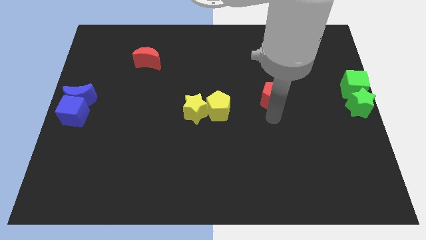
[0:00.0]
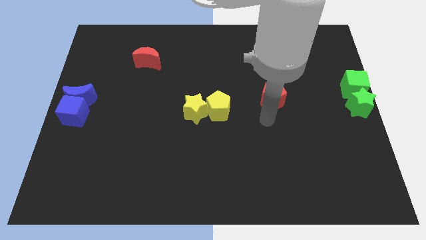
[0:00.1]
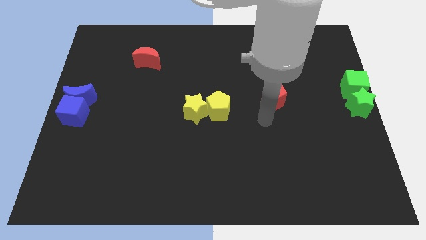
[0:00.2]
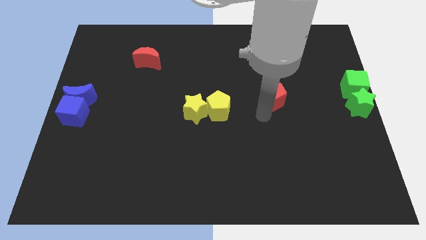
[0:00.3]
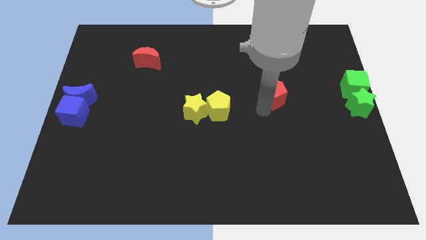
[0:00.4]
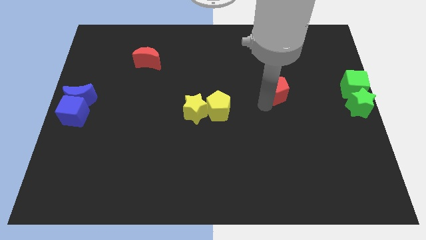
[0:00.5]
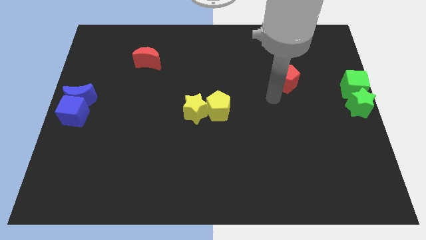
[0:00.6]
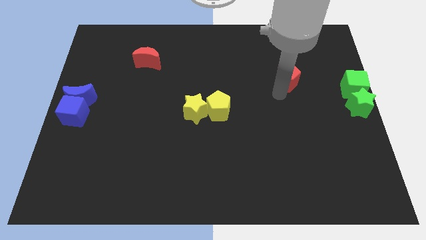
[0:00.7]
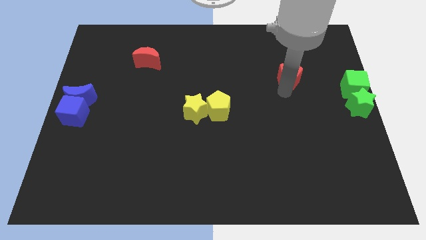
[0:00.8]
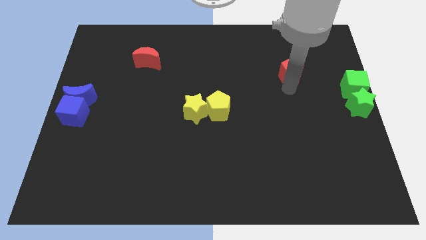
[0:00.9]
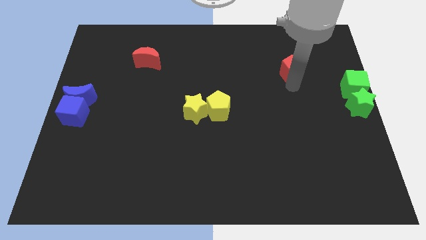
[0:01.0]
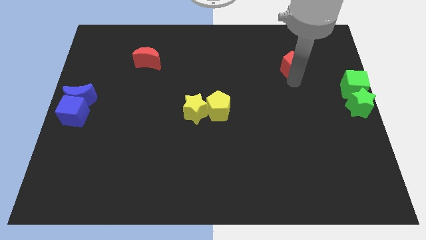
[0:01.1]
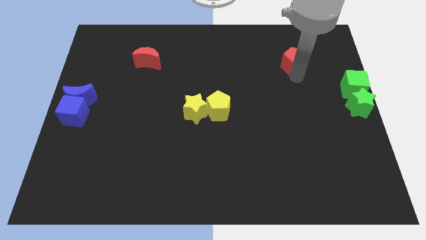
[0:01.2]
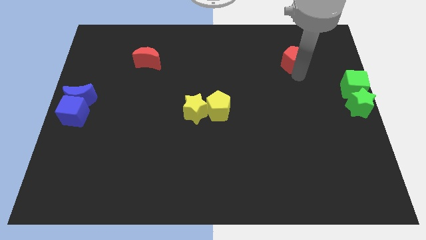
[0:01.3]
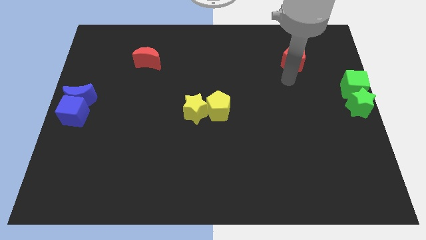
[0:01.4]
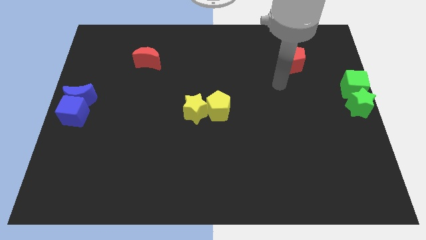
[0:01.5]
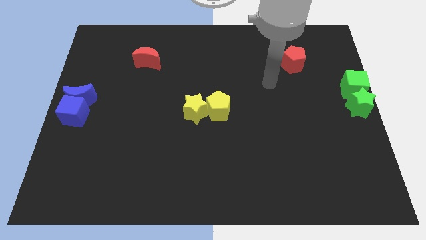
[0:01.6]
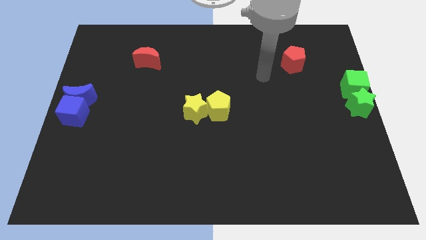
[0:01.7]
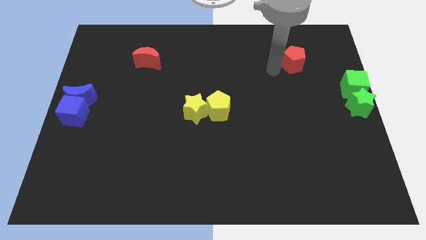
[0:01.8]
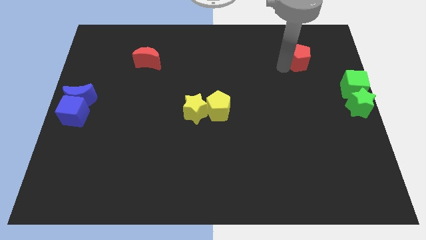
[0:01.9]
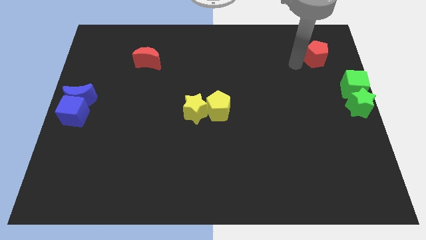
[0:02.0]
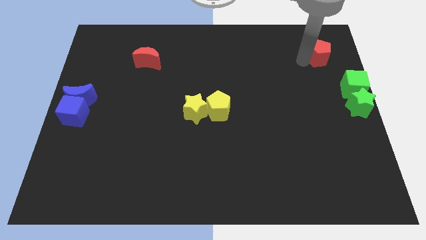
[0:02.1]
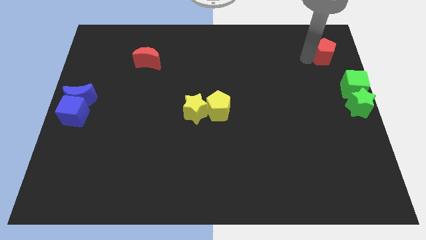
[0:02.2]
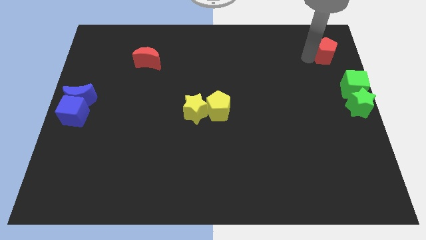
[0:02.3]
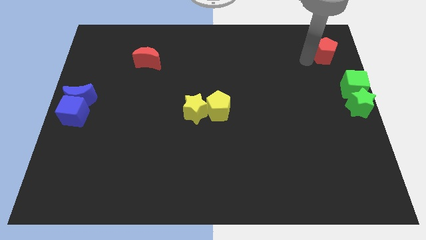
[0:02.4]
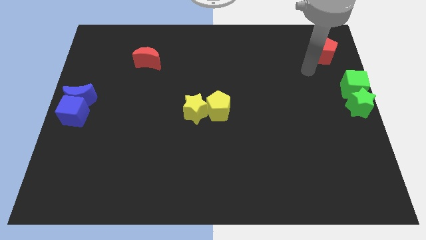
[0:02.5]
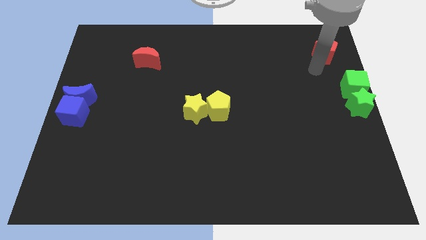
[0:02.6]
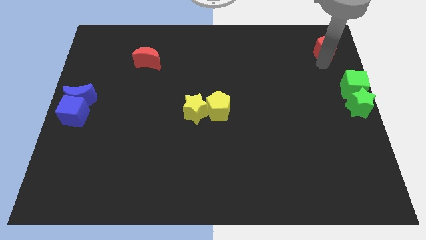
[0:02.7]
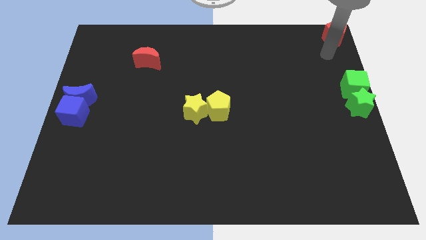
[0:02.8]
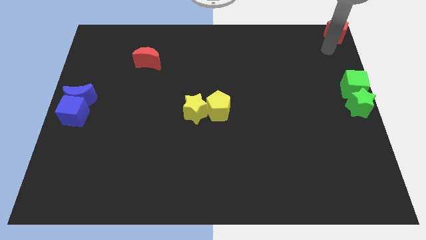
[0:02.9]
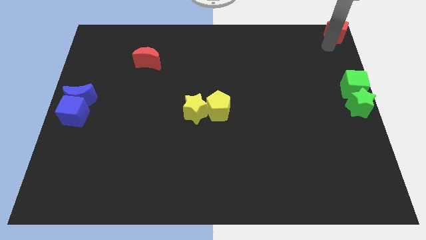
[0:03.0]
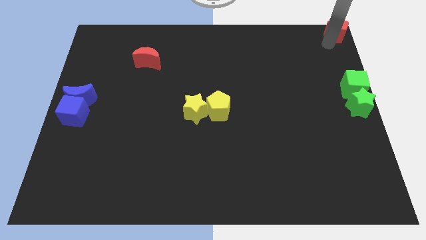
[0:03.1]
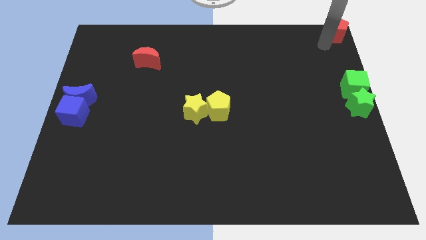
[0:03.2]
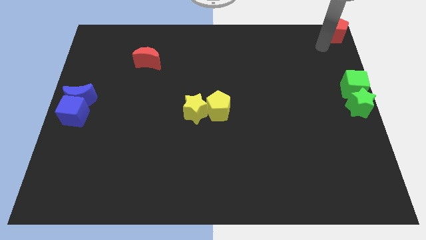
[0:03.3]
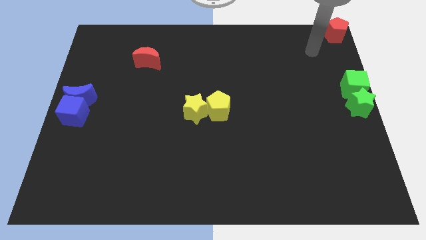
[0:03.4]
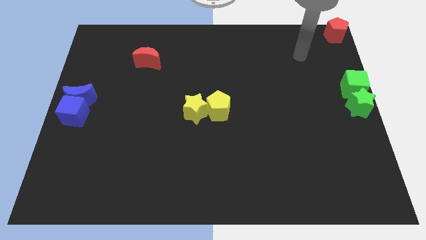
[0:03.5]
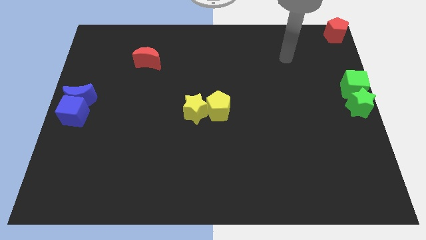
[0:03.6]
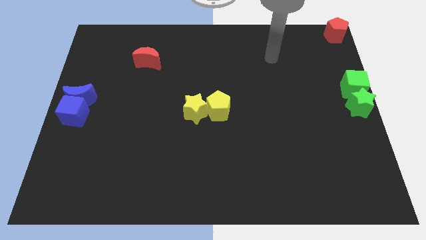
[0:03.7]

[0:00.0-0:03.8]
push the red pentagon to the top right corner of the board

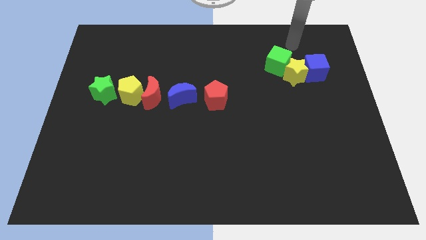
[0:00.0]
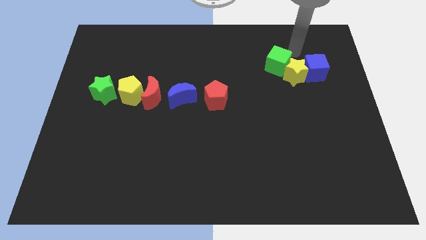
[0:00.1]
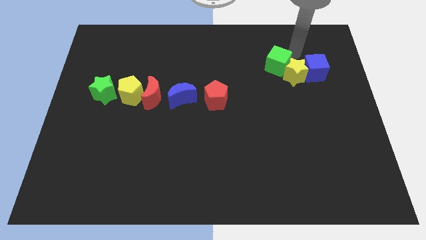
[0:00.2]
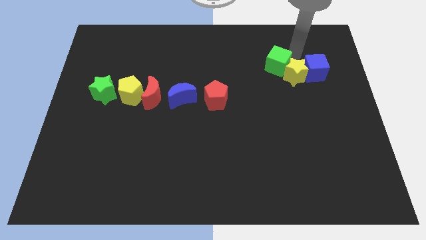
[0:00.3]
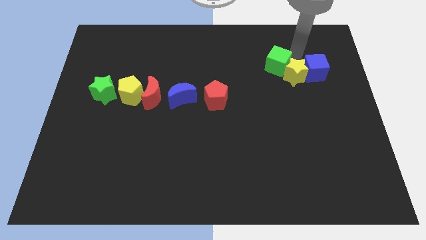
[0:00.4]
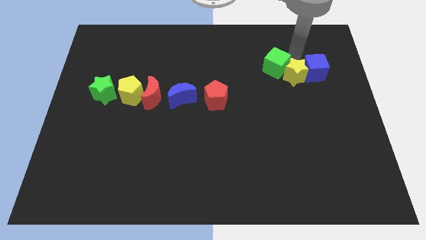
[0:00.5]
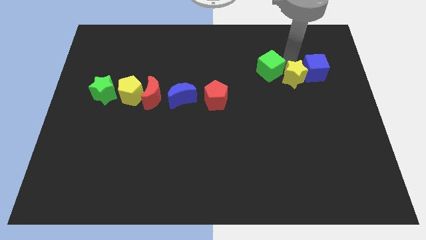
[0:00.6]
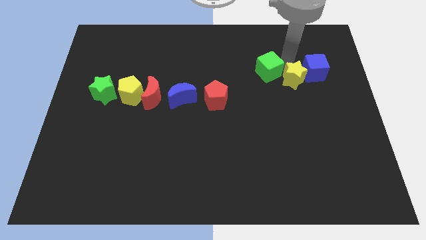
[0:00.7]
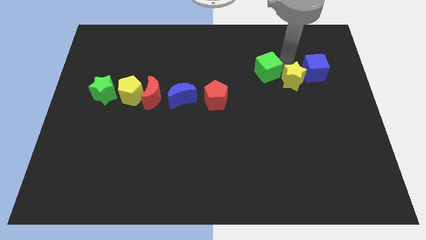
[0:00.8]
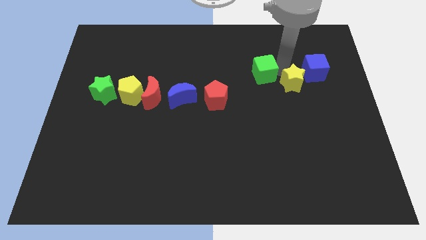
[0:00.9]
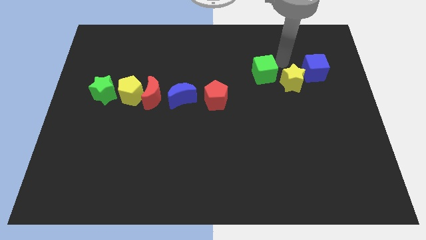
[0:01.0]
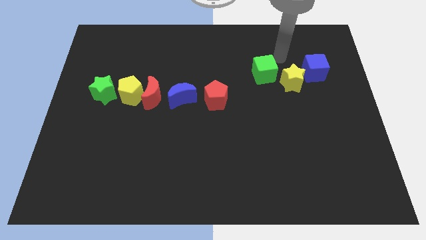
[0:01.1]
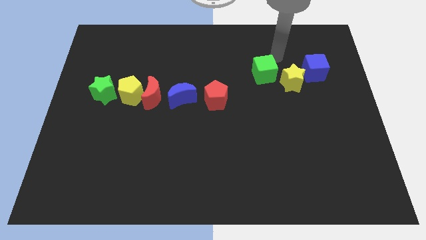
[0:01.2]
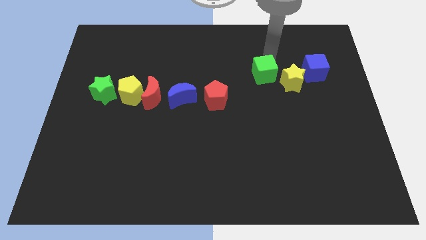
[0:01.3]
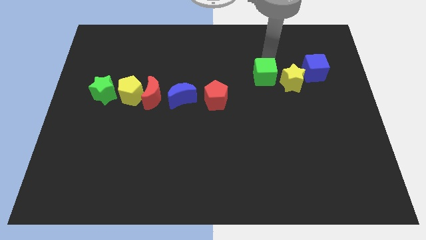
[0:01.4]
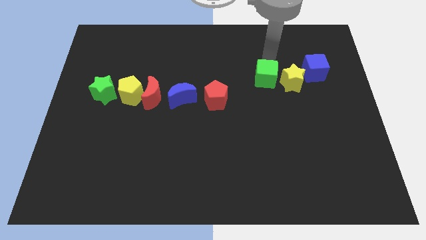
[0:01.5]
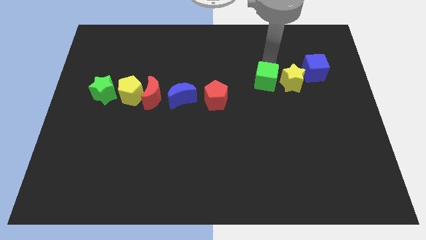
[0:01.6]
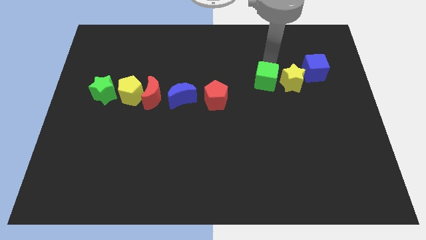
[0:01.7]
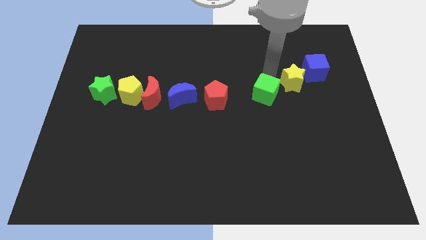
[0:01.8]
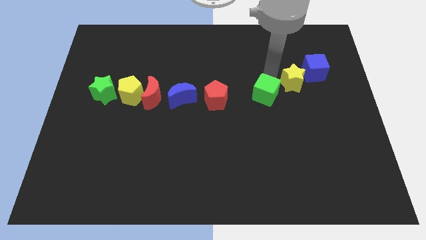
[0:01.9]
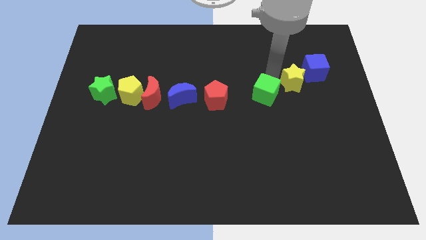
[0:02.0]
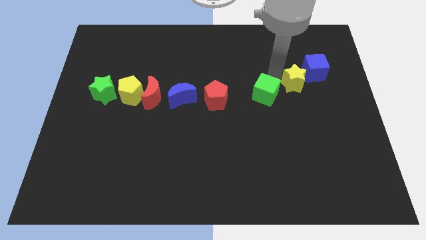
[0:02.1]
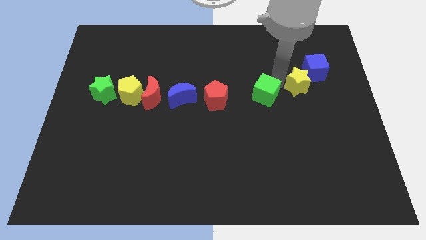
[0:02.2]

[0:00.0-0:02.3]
separate green cube and green star

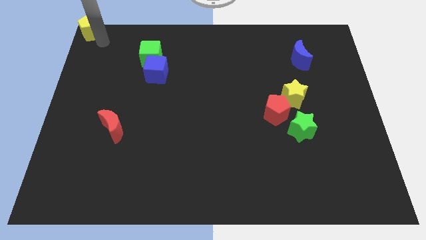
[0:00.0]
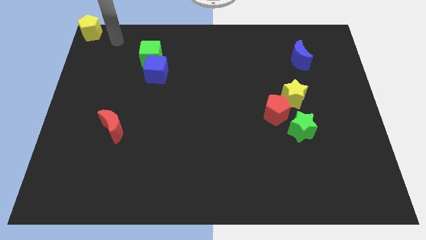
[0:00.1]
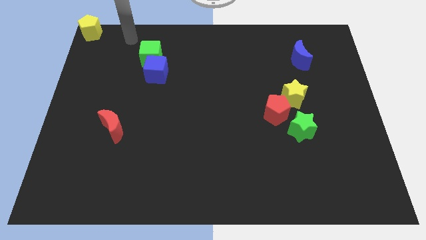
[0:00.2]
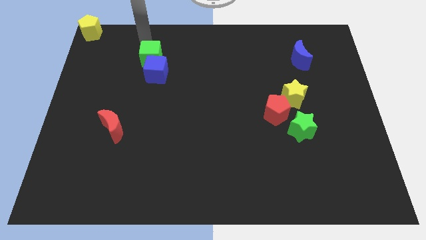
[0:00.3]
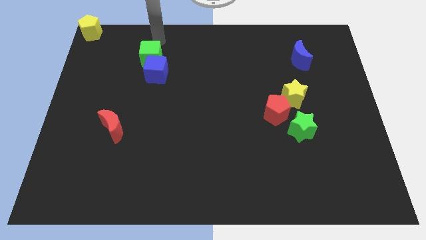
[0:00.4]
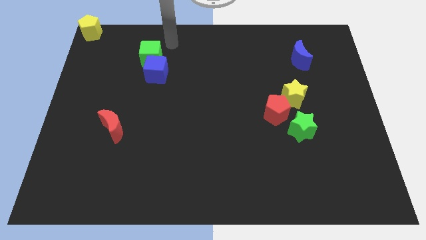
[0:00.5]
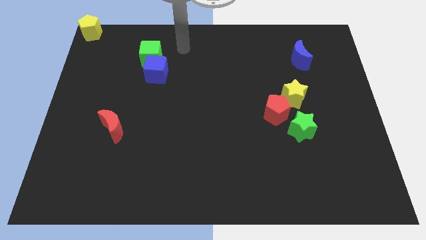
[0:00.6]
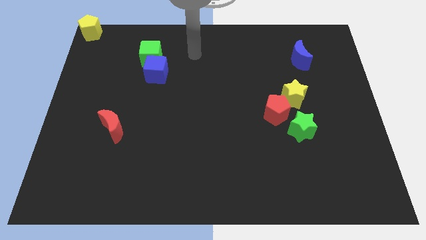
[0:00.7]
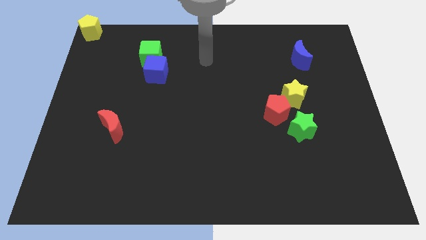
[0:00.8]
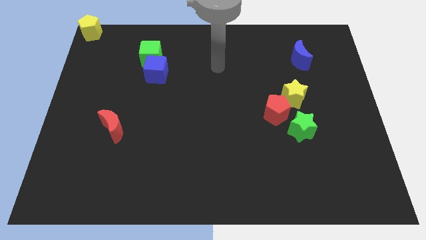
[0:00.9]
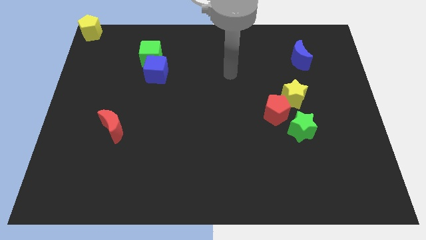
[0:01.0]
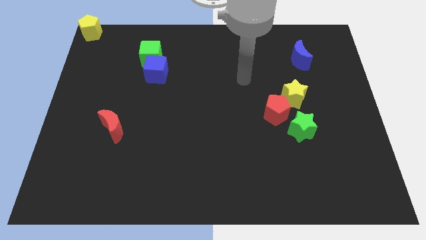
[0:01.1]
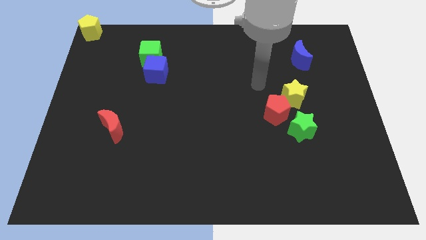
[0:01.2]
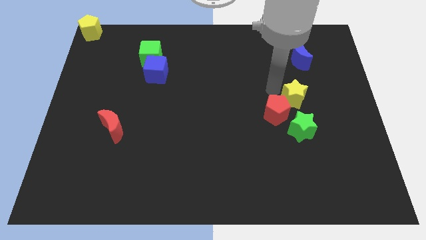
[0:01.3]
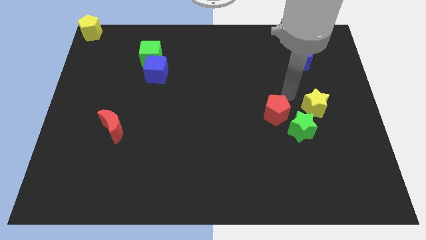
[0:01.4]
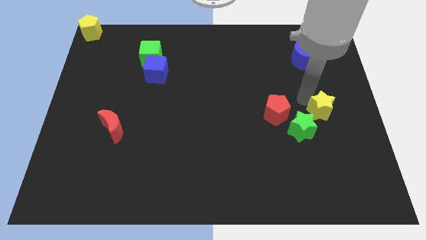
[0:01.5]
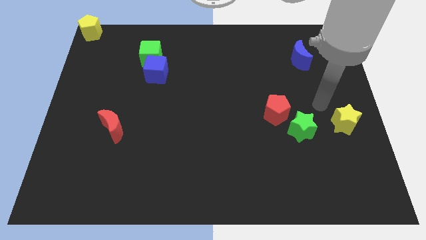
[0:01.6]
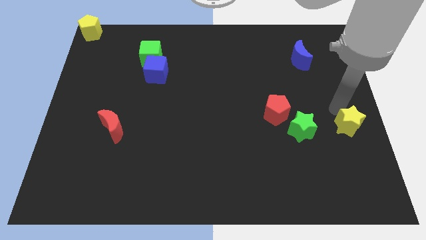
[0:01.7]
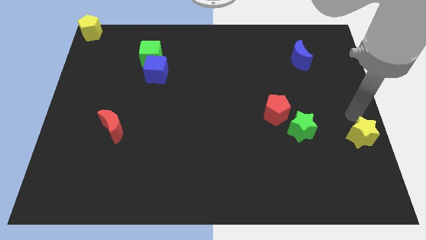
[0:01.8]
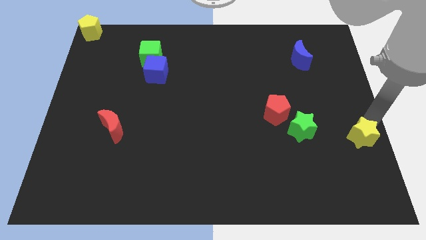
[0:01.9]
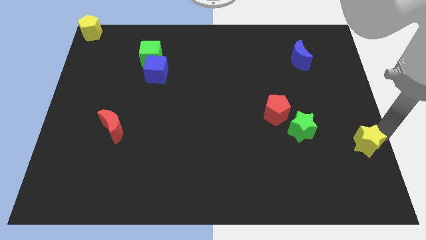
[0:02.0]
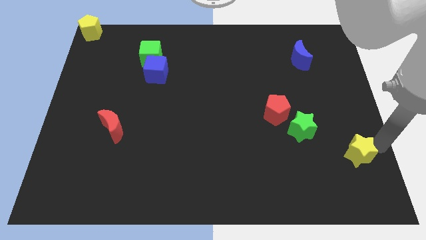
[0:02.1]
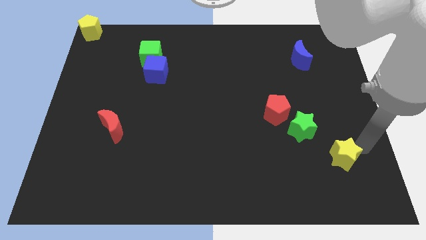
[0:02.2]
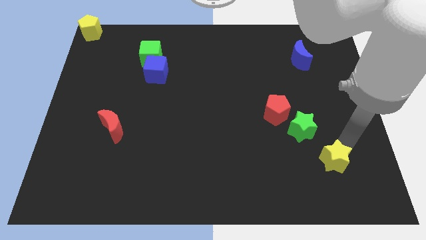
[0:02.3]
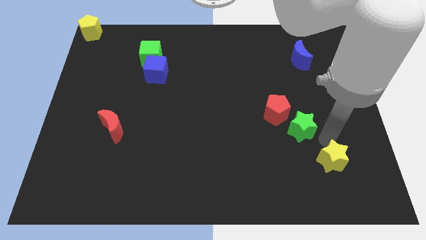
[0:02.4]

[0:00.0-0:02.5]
push the yellow star to the bottom right of green star

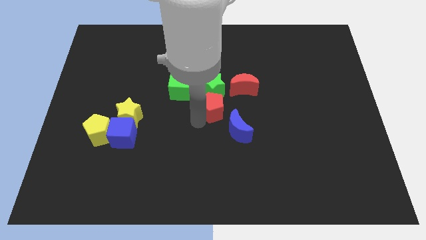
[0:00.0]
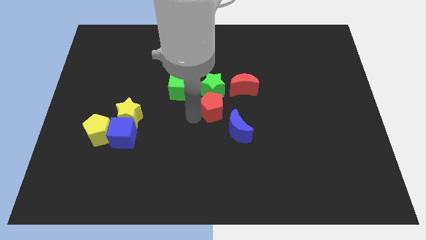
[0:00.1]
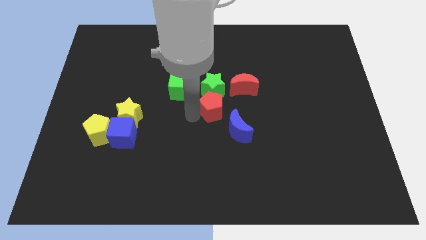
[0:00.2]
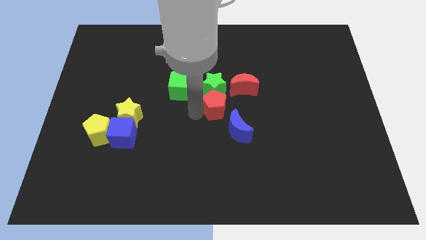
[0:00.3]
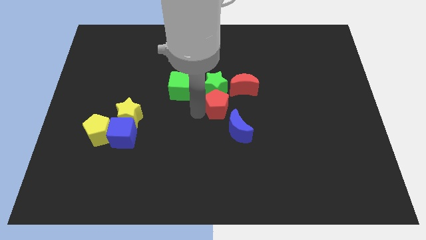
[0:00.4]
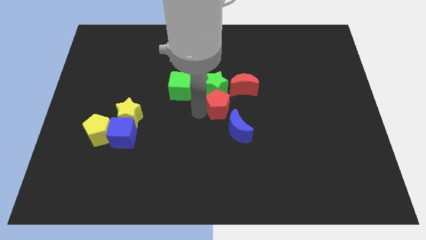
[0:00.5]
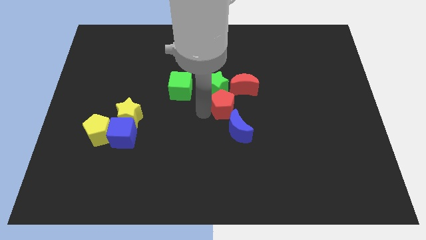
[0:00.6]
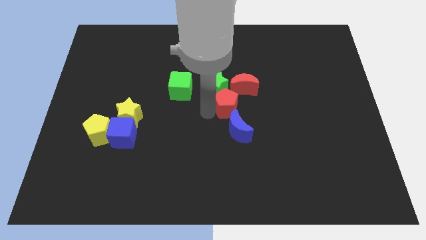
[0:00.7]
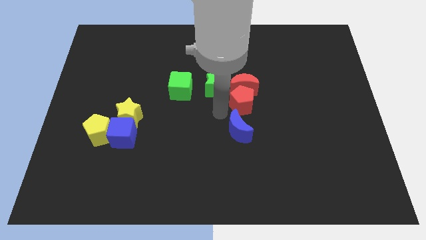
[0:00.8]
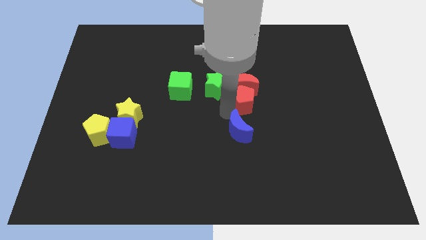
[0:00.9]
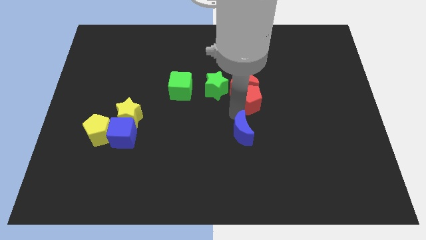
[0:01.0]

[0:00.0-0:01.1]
slide the red pentagon to the bottom of the red crescent
